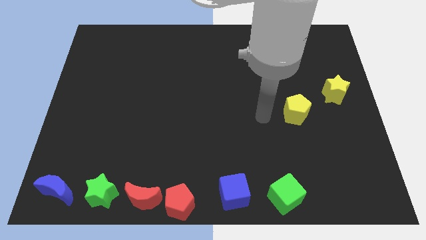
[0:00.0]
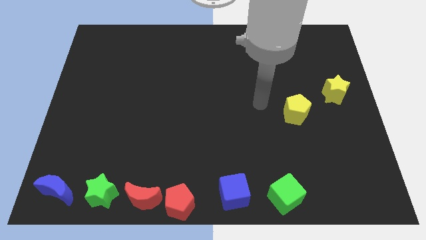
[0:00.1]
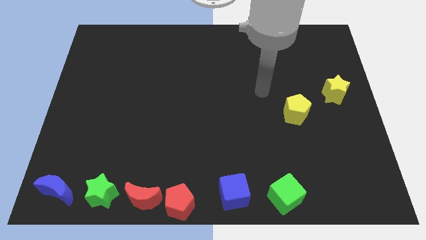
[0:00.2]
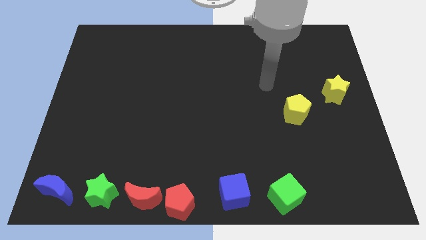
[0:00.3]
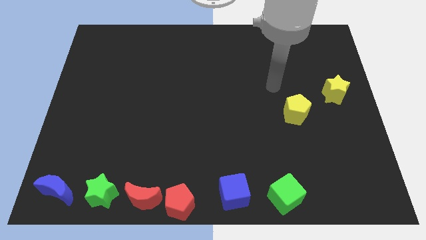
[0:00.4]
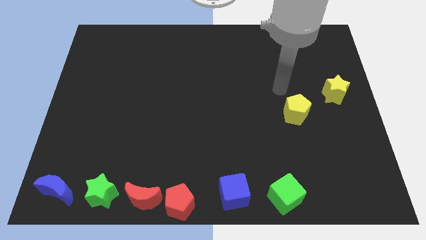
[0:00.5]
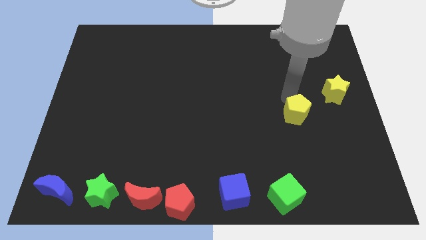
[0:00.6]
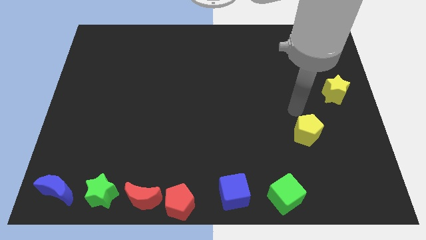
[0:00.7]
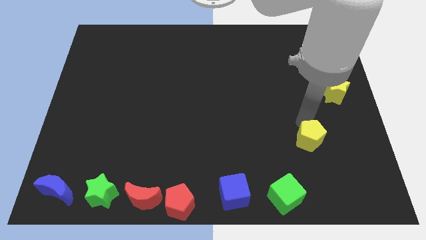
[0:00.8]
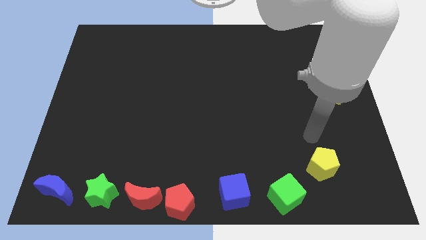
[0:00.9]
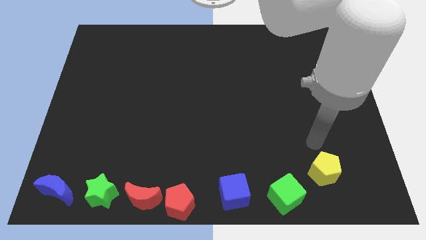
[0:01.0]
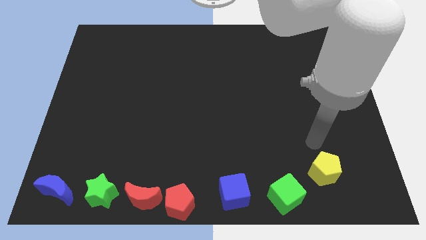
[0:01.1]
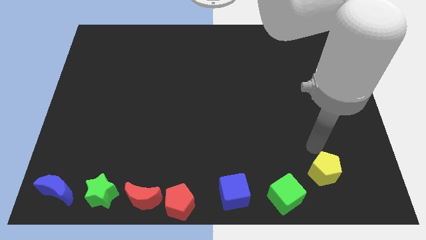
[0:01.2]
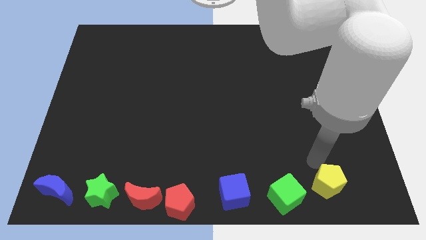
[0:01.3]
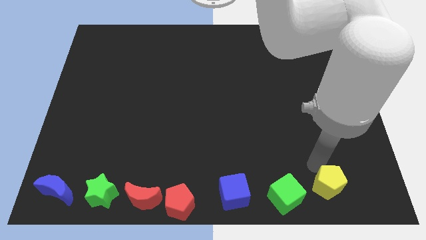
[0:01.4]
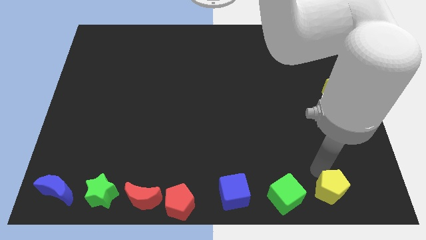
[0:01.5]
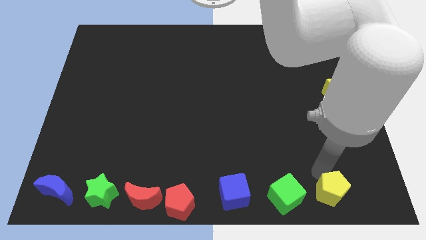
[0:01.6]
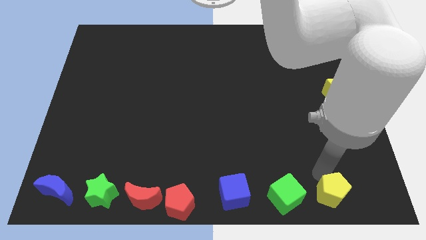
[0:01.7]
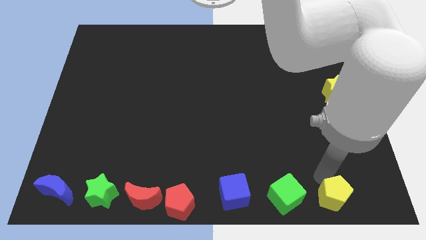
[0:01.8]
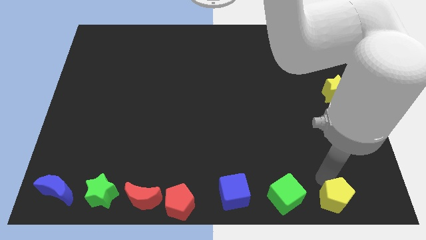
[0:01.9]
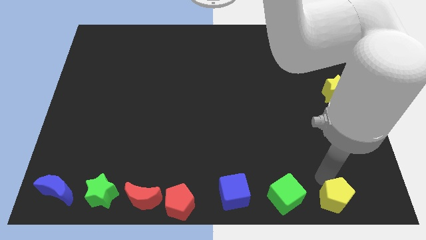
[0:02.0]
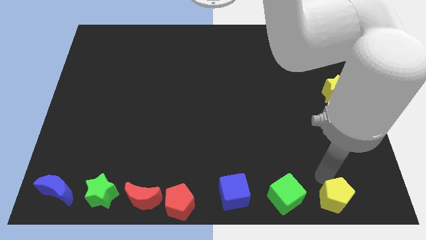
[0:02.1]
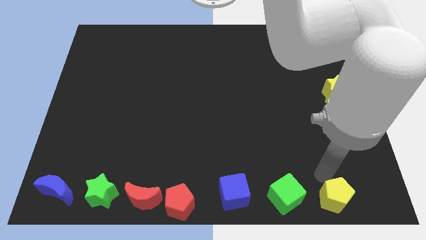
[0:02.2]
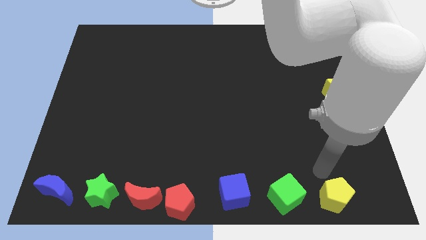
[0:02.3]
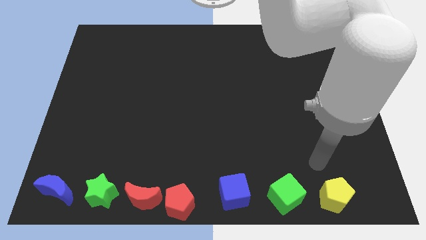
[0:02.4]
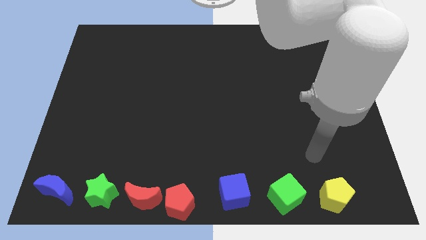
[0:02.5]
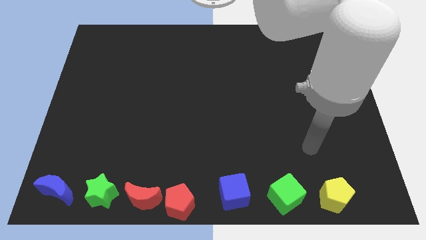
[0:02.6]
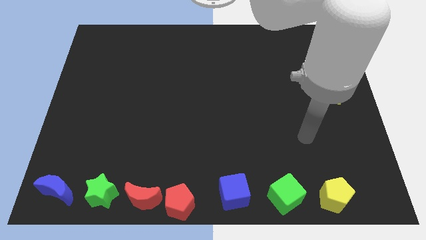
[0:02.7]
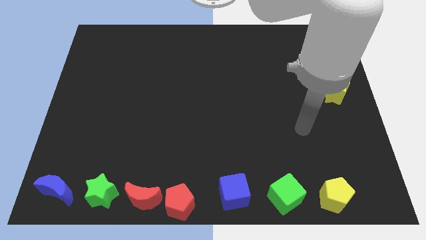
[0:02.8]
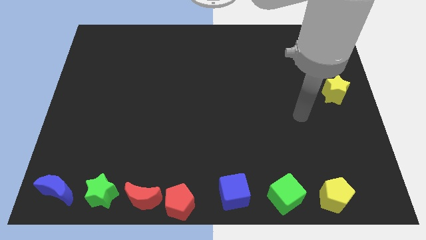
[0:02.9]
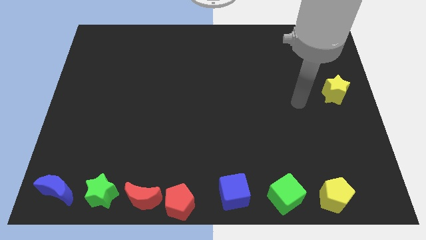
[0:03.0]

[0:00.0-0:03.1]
place the yellow pentagon to the right side of the green cube

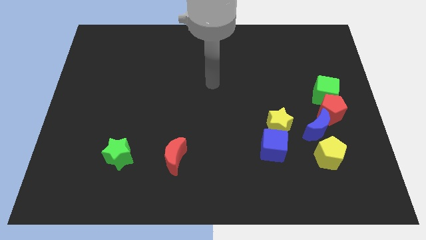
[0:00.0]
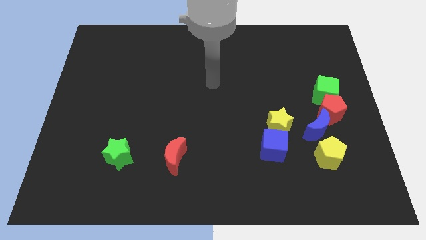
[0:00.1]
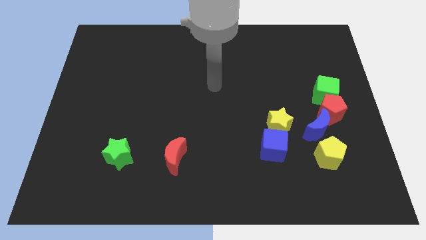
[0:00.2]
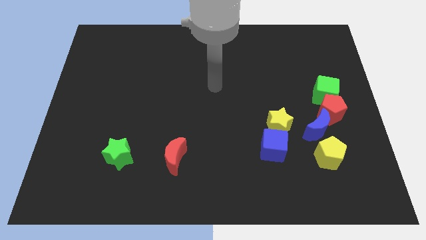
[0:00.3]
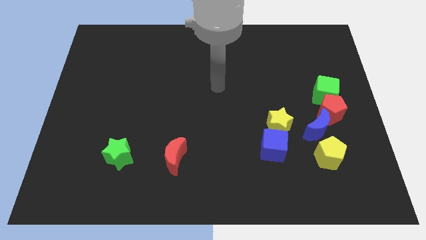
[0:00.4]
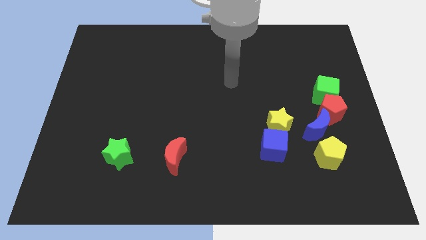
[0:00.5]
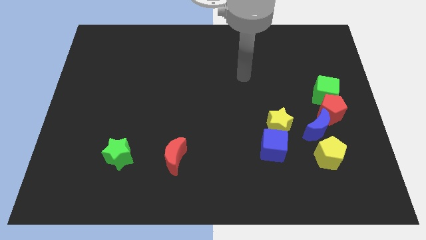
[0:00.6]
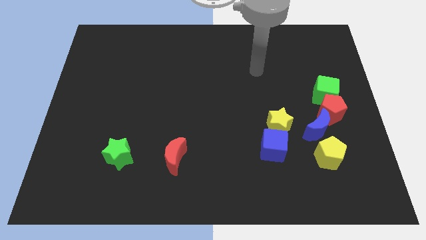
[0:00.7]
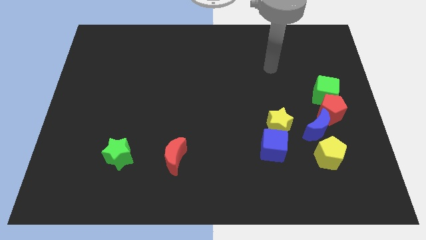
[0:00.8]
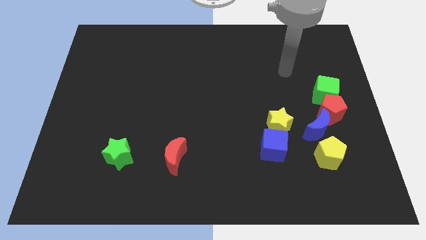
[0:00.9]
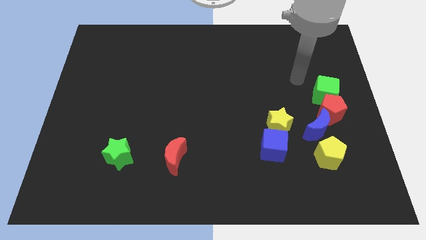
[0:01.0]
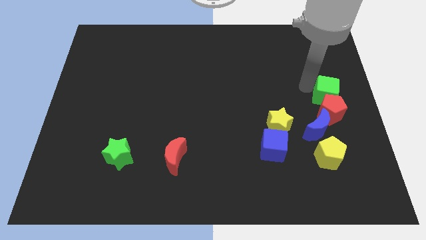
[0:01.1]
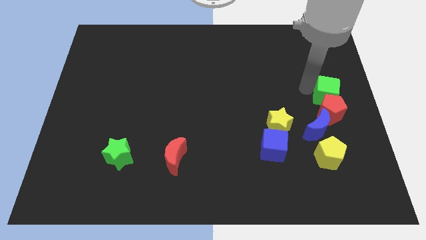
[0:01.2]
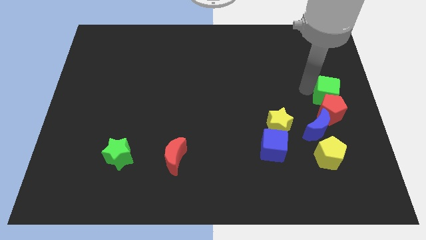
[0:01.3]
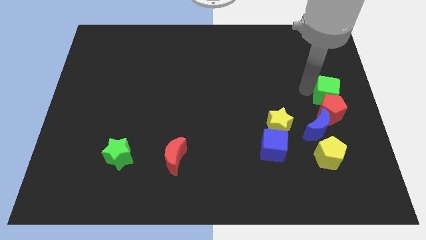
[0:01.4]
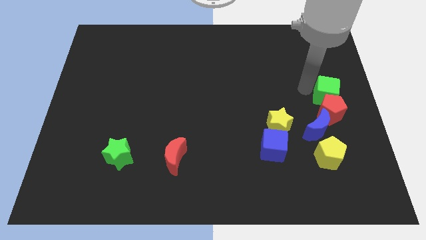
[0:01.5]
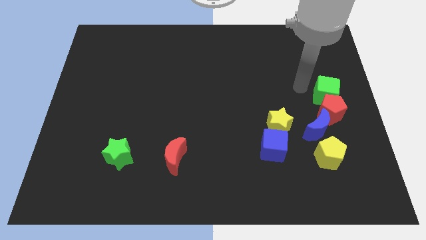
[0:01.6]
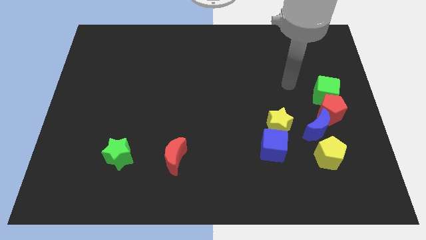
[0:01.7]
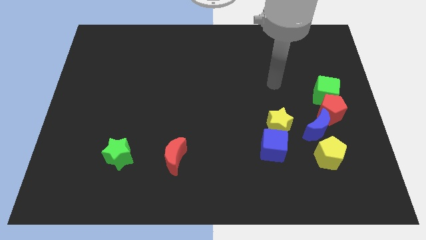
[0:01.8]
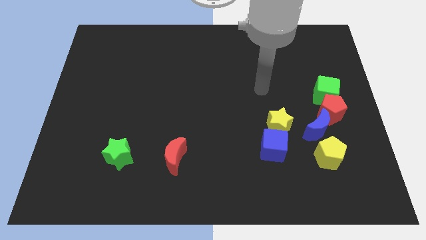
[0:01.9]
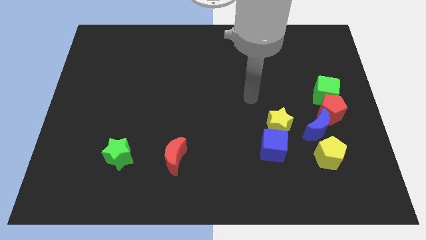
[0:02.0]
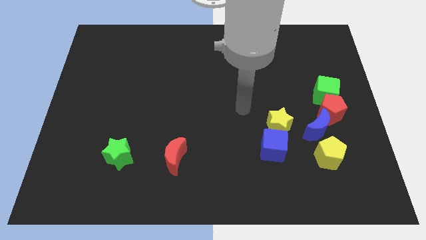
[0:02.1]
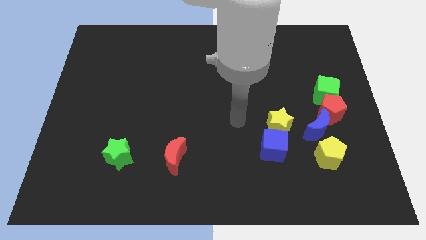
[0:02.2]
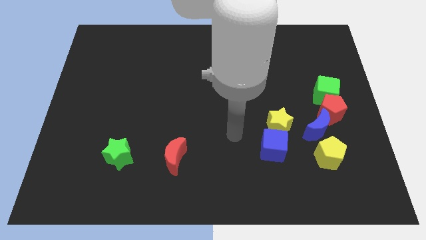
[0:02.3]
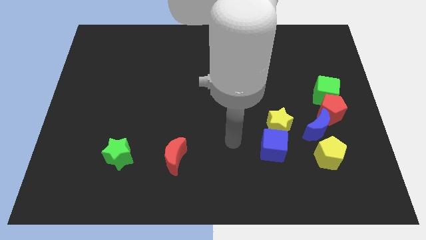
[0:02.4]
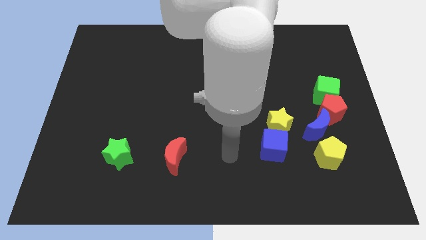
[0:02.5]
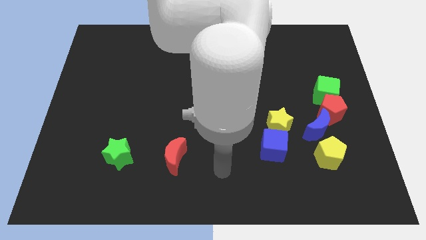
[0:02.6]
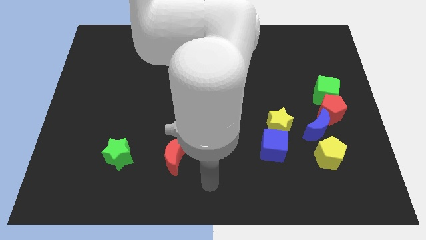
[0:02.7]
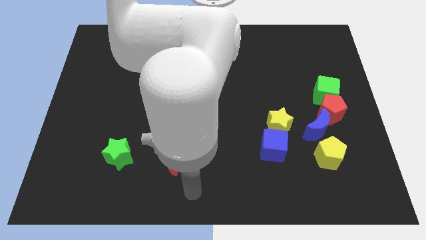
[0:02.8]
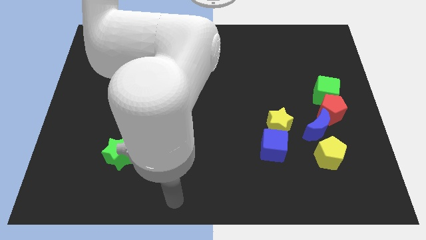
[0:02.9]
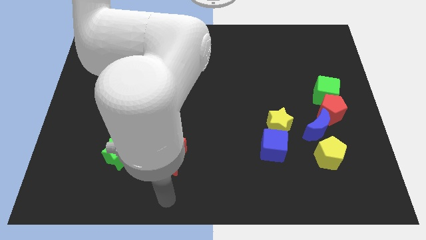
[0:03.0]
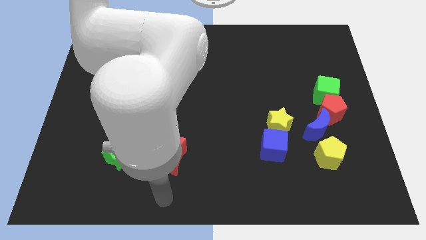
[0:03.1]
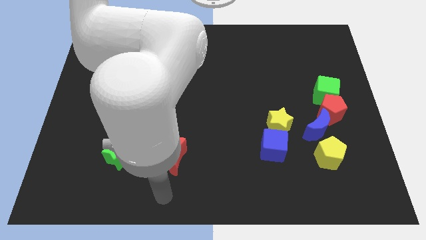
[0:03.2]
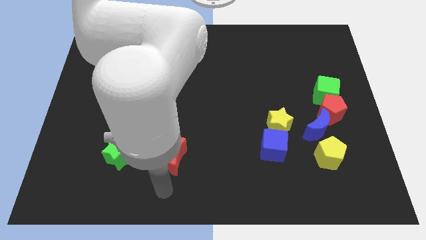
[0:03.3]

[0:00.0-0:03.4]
move your arm to the bottom center of the board

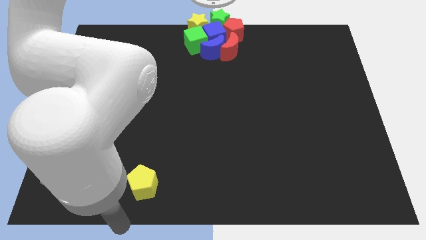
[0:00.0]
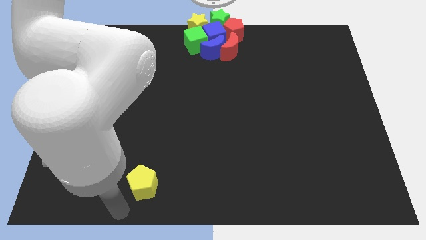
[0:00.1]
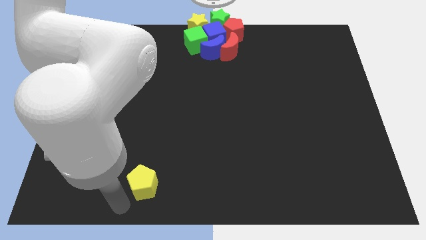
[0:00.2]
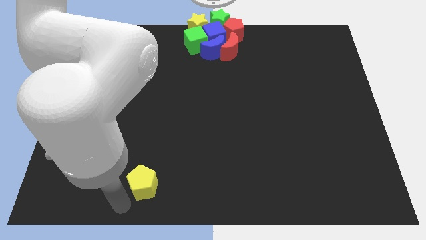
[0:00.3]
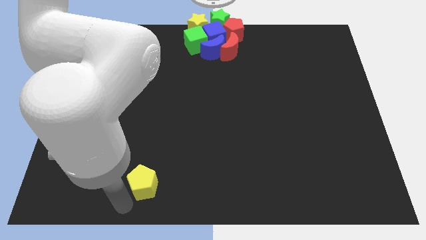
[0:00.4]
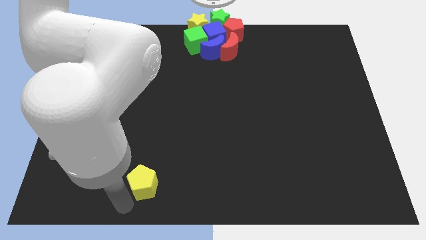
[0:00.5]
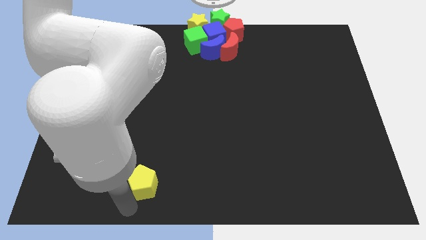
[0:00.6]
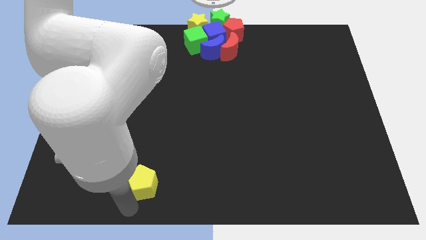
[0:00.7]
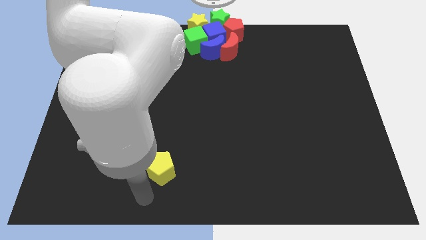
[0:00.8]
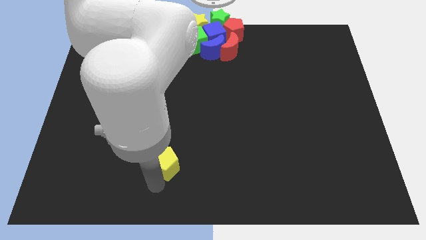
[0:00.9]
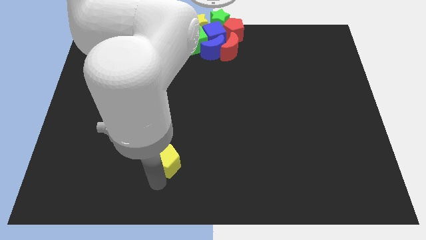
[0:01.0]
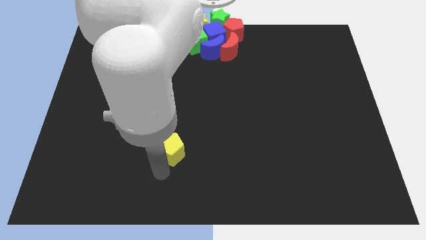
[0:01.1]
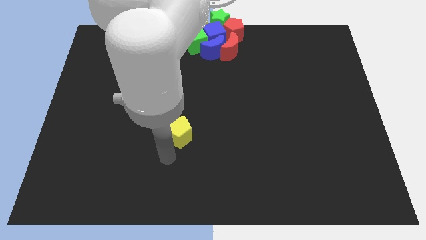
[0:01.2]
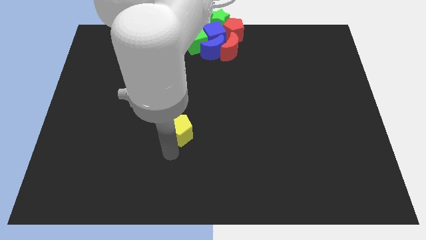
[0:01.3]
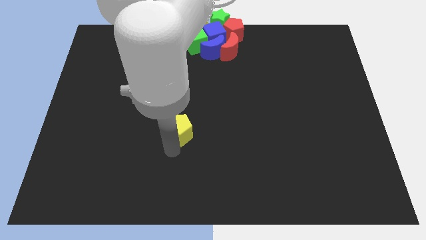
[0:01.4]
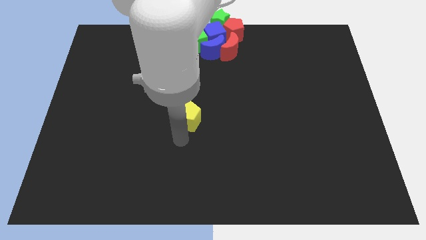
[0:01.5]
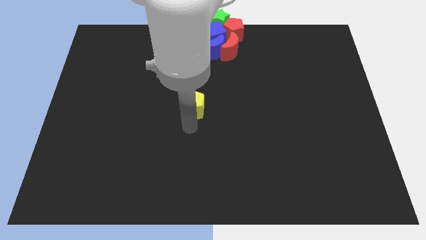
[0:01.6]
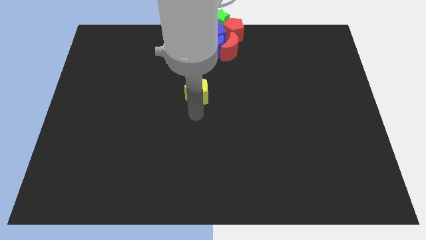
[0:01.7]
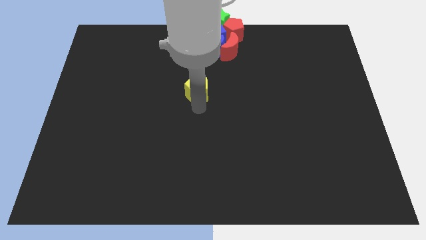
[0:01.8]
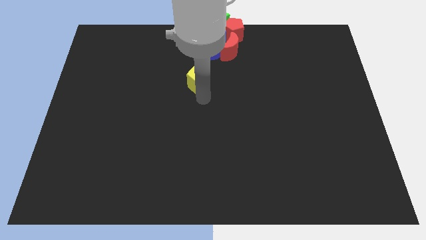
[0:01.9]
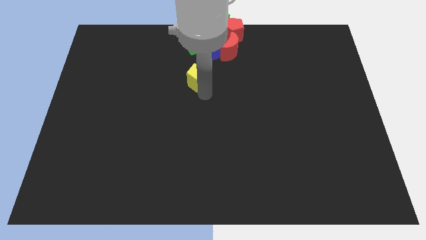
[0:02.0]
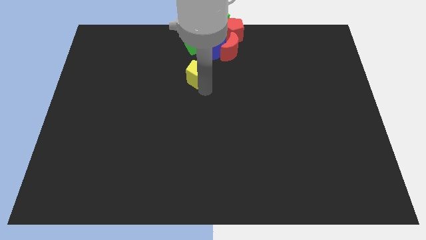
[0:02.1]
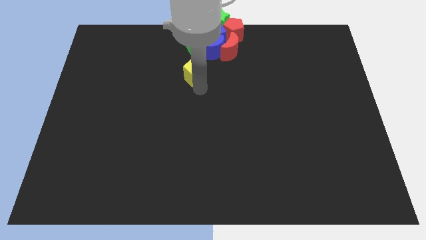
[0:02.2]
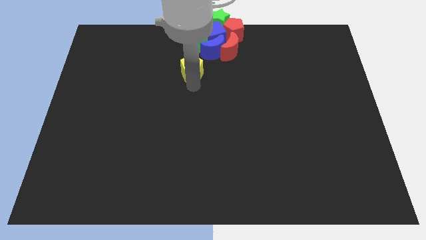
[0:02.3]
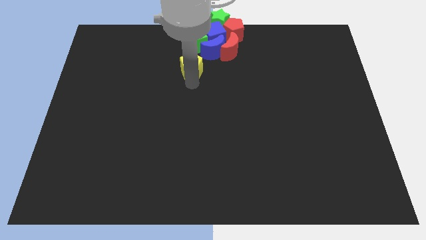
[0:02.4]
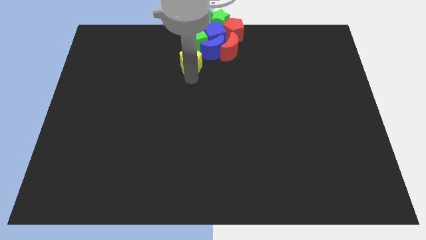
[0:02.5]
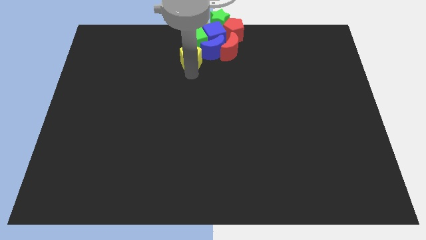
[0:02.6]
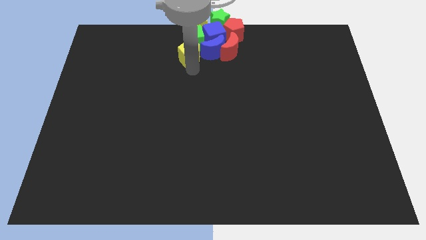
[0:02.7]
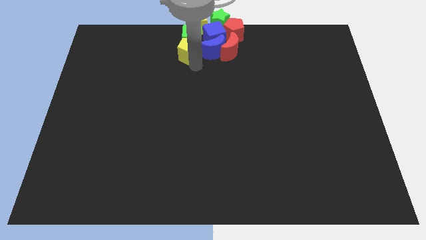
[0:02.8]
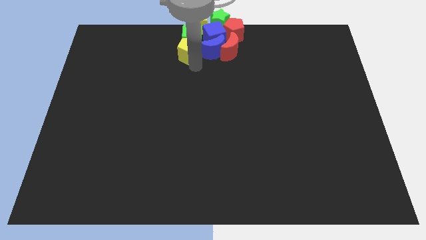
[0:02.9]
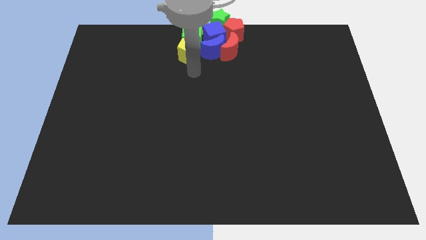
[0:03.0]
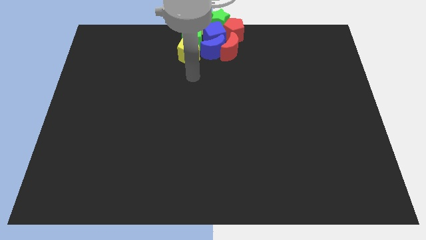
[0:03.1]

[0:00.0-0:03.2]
push the yellow pentagon into the green cube
